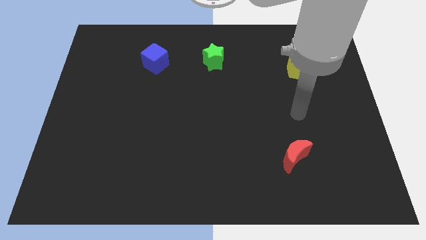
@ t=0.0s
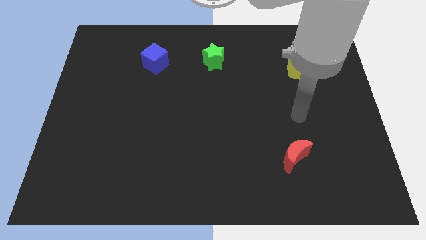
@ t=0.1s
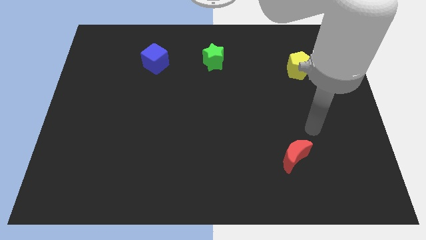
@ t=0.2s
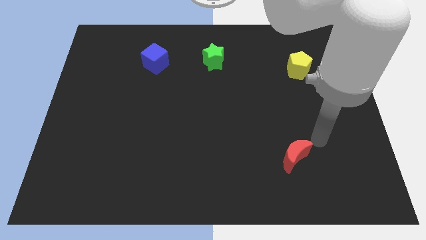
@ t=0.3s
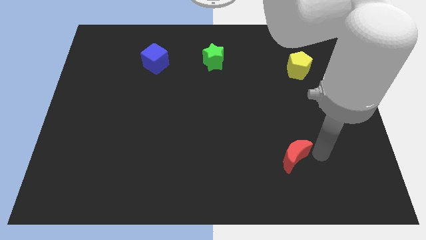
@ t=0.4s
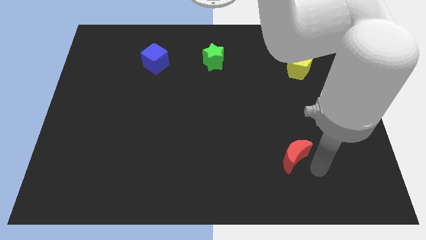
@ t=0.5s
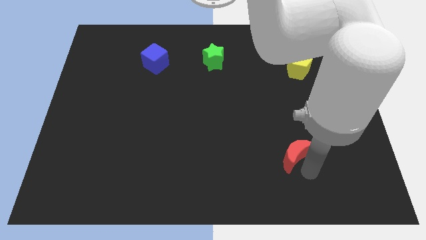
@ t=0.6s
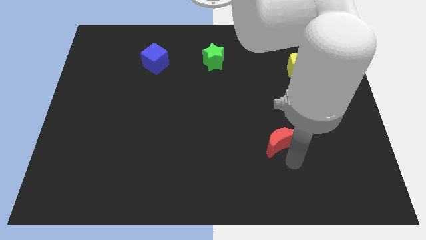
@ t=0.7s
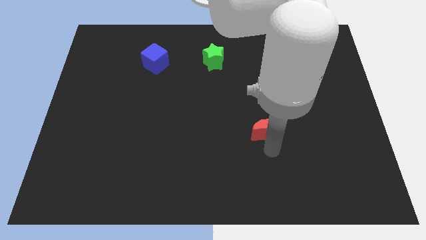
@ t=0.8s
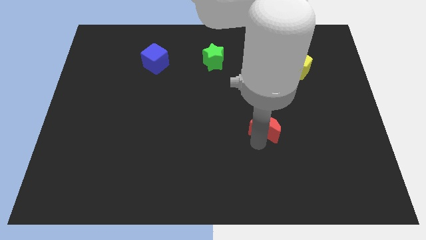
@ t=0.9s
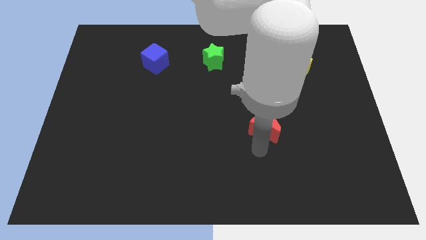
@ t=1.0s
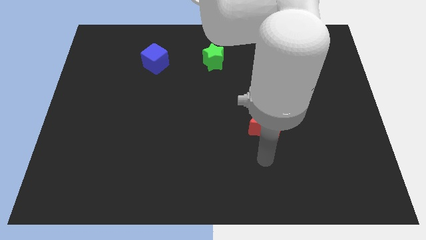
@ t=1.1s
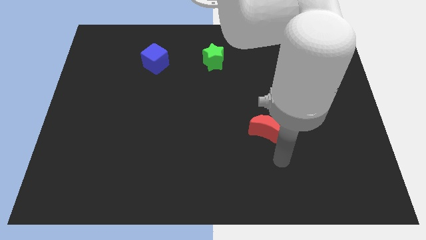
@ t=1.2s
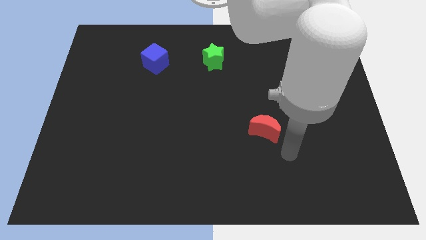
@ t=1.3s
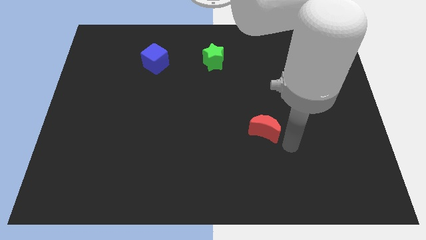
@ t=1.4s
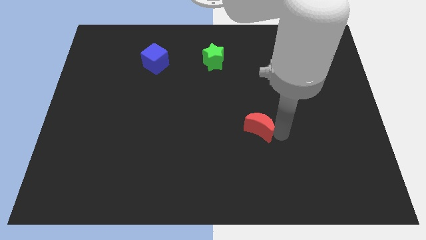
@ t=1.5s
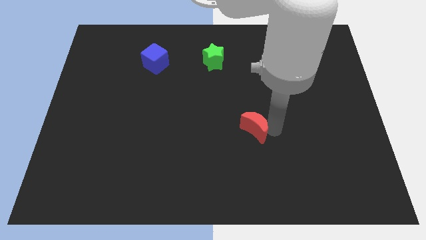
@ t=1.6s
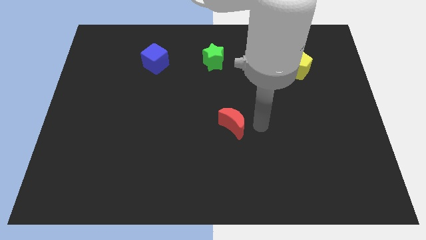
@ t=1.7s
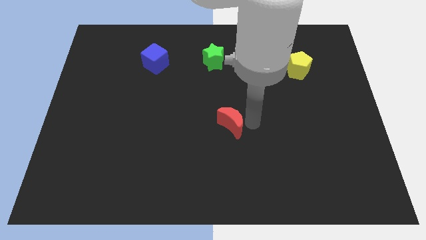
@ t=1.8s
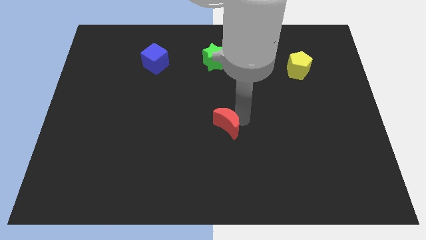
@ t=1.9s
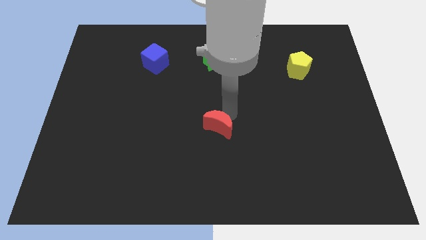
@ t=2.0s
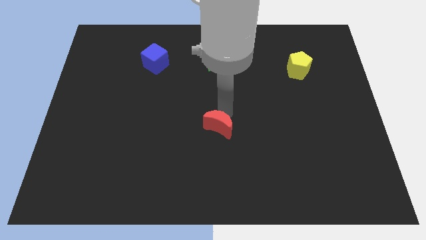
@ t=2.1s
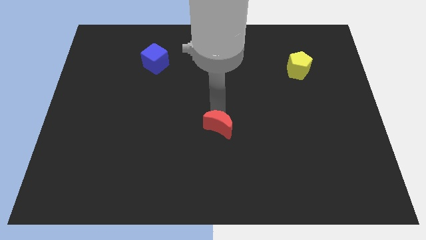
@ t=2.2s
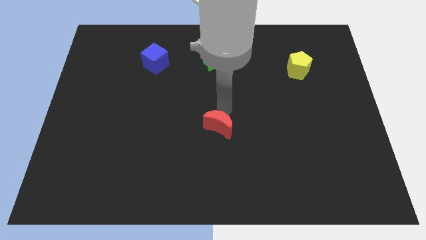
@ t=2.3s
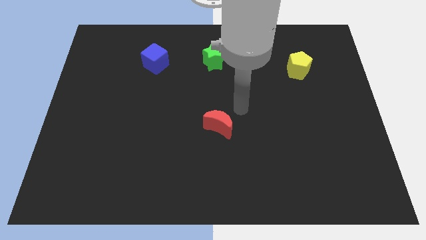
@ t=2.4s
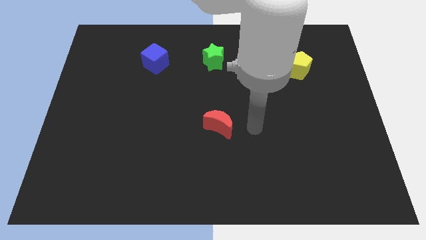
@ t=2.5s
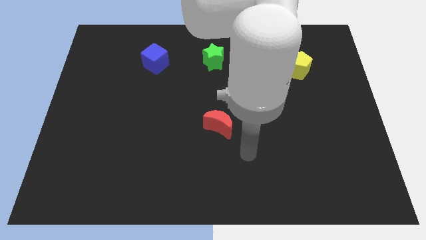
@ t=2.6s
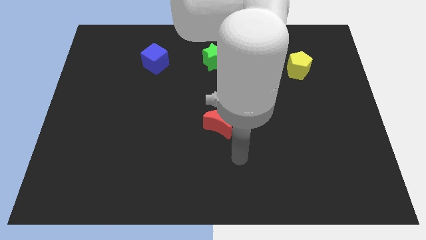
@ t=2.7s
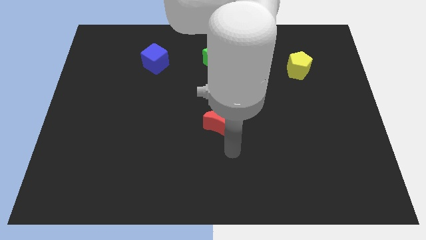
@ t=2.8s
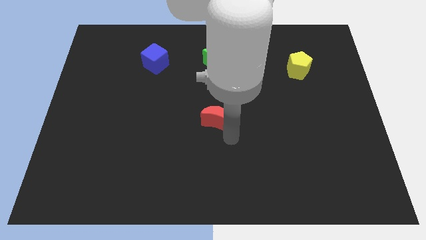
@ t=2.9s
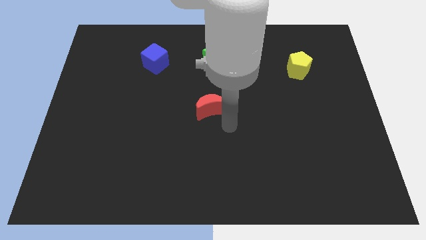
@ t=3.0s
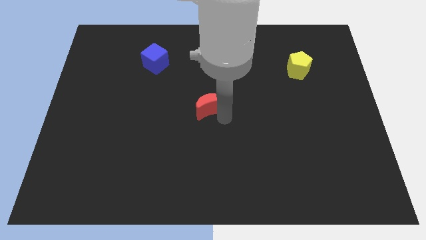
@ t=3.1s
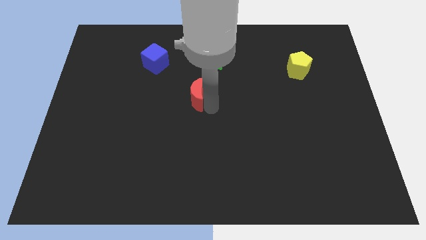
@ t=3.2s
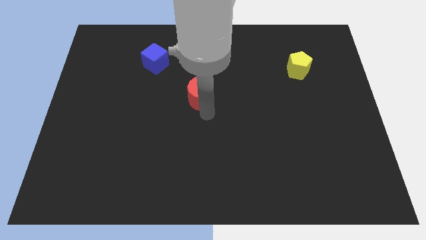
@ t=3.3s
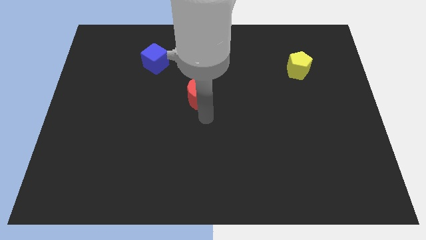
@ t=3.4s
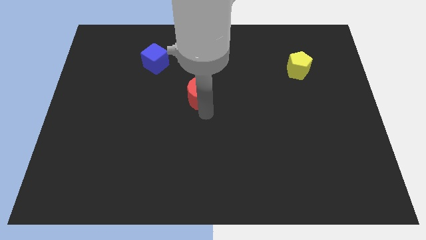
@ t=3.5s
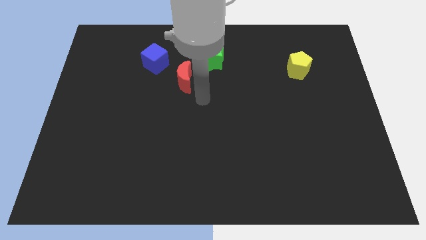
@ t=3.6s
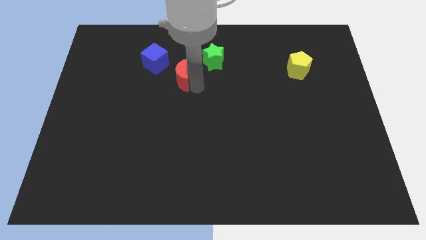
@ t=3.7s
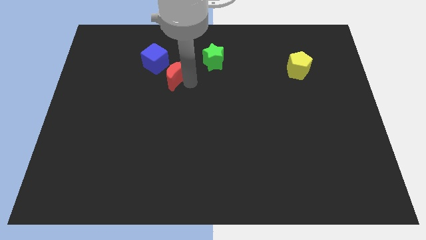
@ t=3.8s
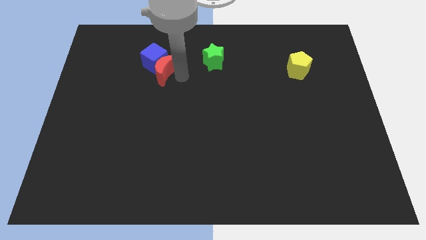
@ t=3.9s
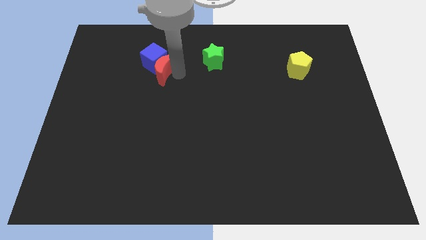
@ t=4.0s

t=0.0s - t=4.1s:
slide the red moon close to the blue block

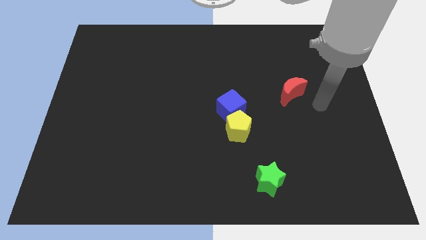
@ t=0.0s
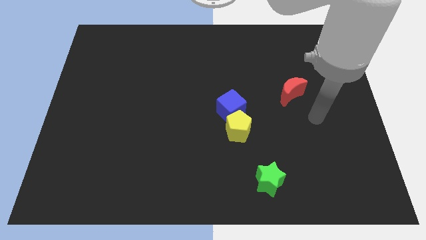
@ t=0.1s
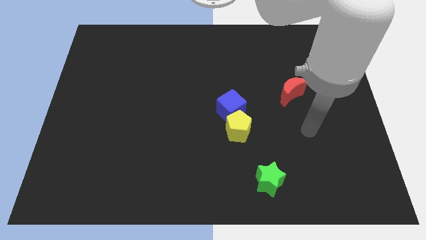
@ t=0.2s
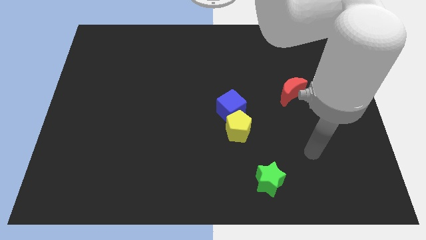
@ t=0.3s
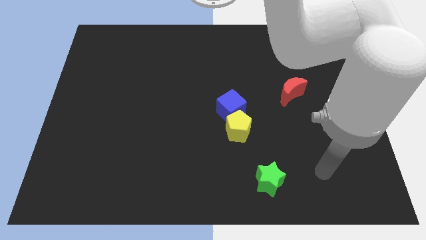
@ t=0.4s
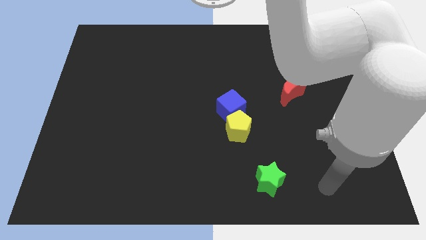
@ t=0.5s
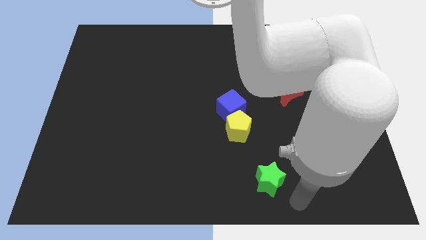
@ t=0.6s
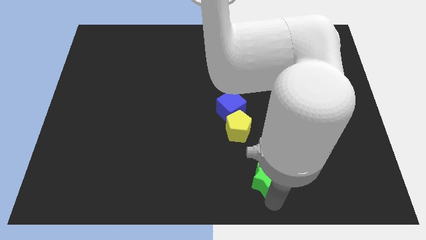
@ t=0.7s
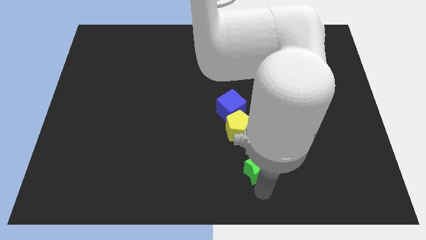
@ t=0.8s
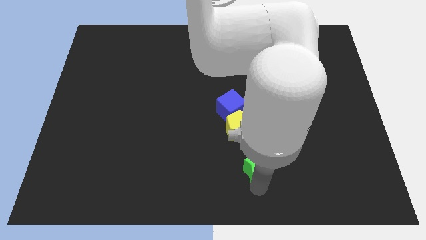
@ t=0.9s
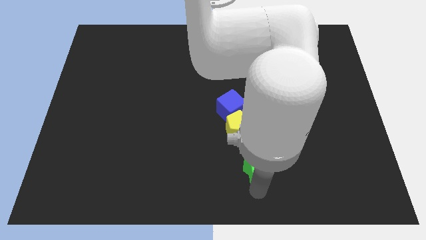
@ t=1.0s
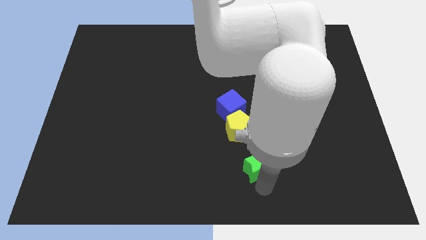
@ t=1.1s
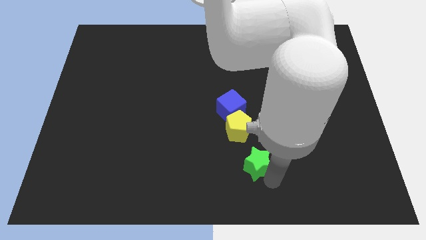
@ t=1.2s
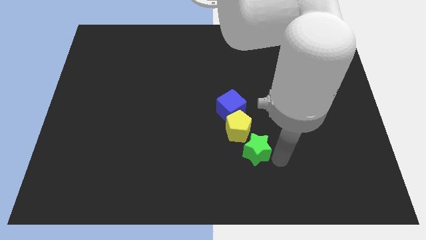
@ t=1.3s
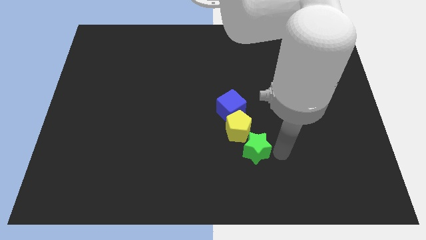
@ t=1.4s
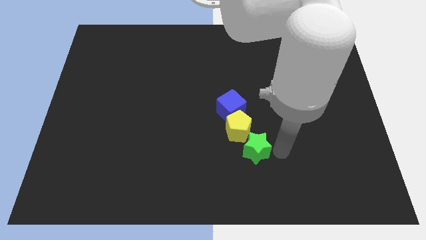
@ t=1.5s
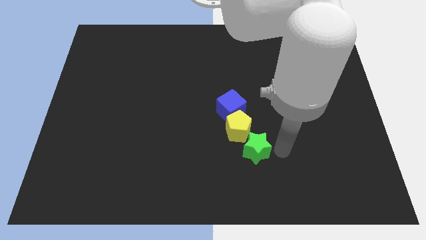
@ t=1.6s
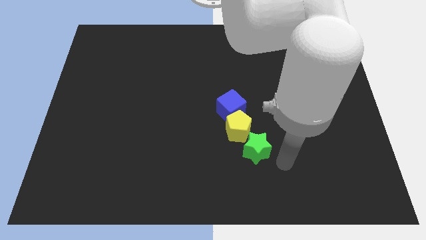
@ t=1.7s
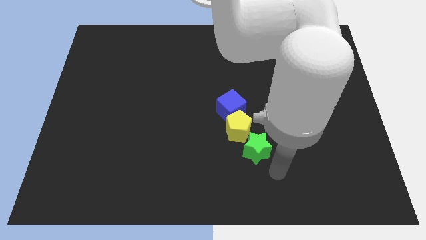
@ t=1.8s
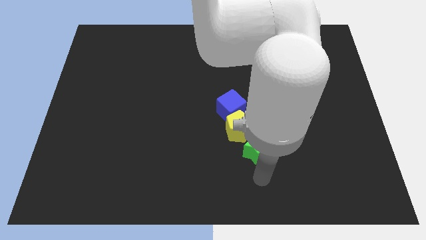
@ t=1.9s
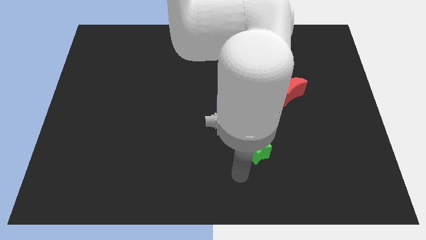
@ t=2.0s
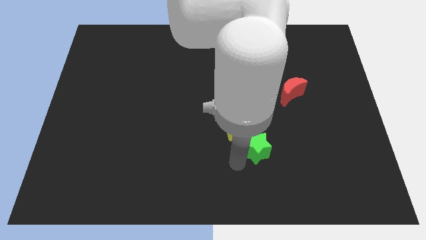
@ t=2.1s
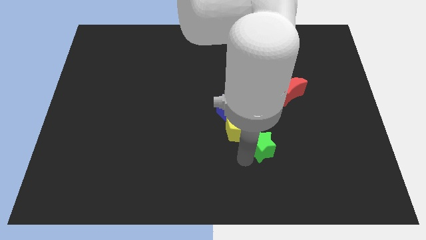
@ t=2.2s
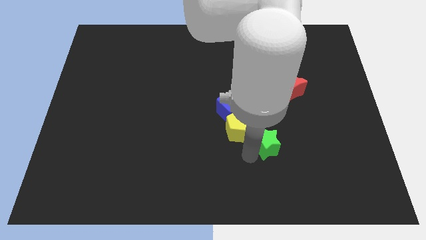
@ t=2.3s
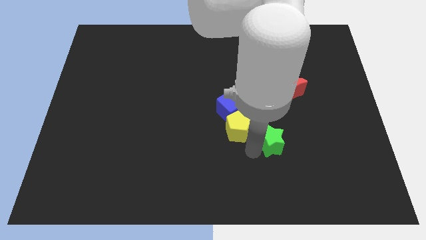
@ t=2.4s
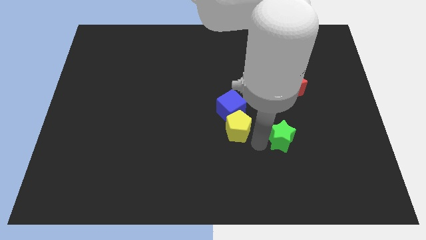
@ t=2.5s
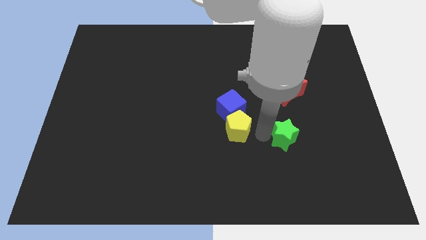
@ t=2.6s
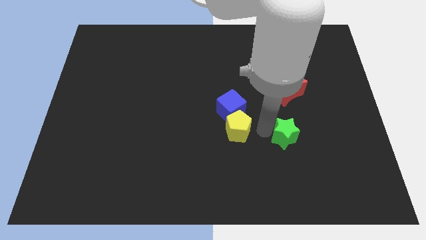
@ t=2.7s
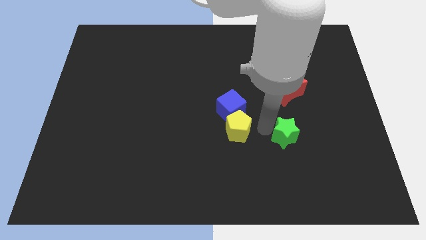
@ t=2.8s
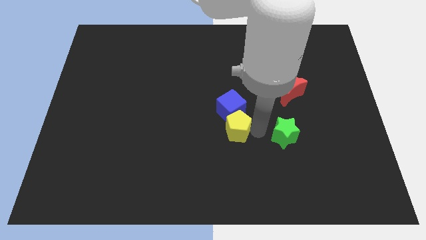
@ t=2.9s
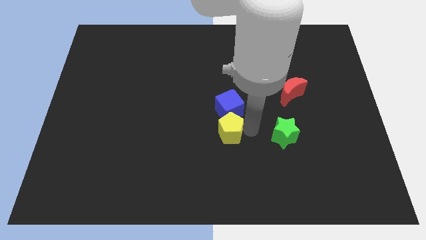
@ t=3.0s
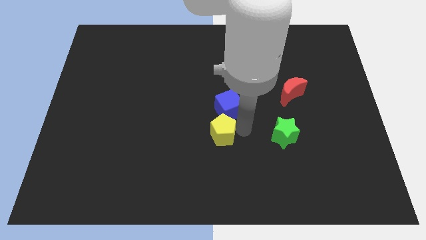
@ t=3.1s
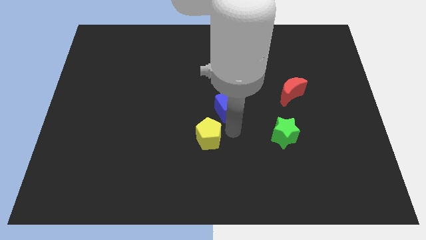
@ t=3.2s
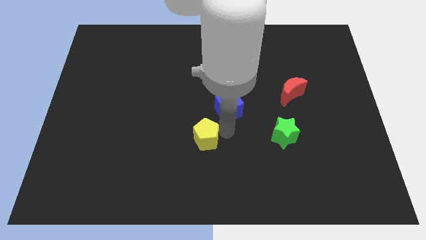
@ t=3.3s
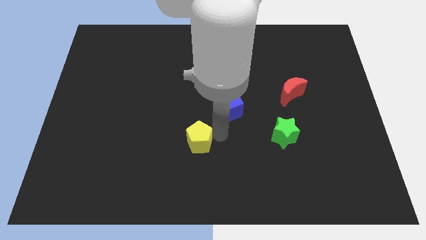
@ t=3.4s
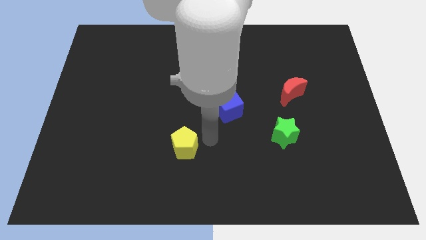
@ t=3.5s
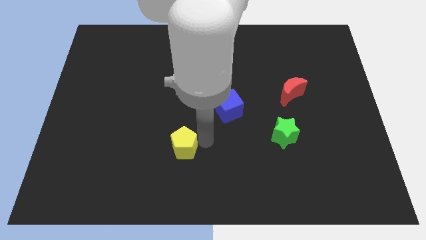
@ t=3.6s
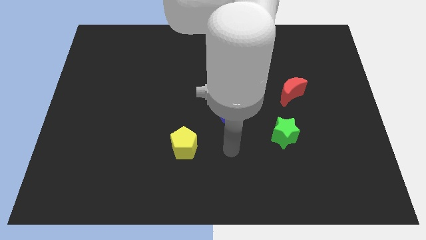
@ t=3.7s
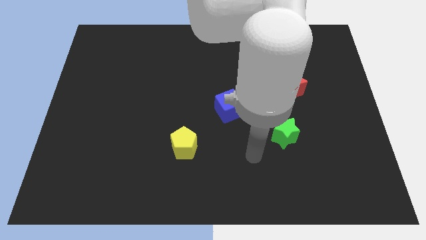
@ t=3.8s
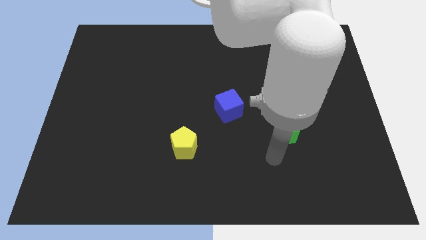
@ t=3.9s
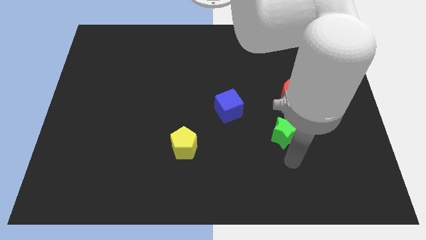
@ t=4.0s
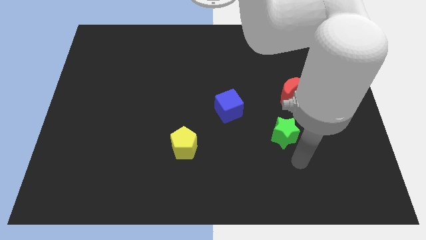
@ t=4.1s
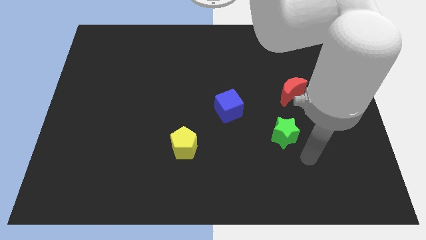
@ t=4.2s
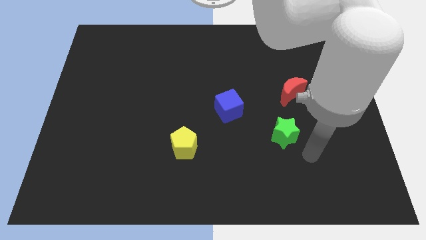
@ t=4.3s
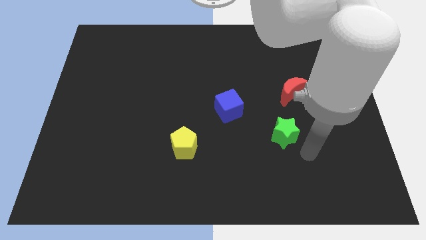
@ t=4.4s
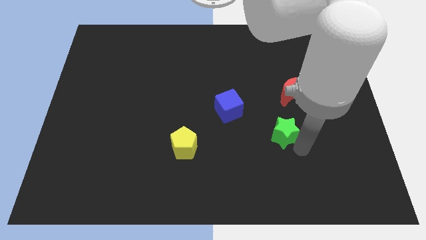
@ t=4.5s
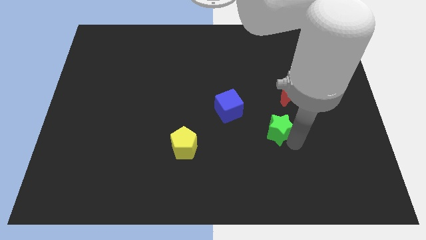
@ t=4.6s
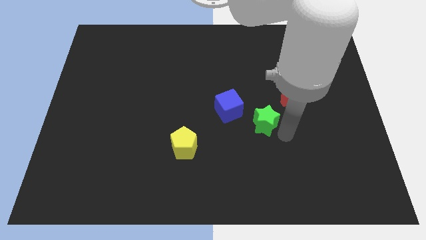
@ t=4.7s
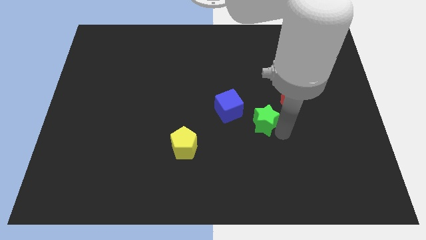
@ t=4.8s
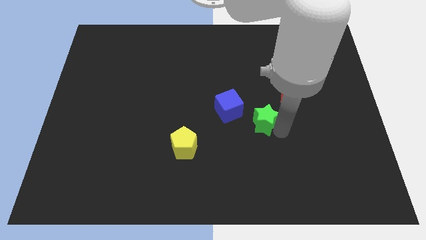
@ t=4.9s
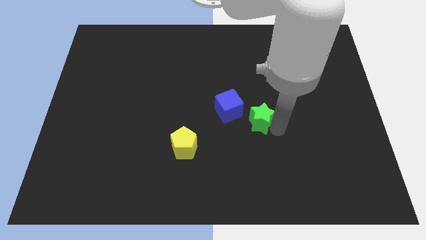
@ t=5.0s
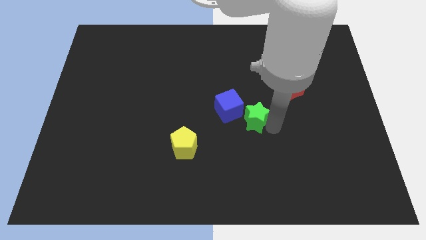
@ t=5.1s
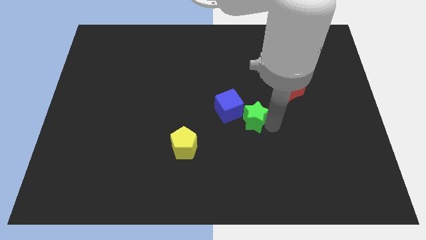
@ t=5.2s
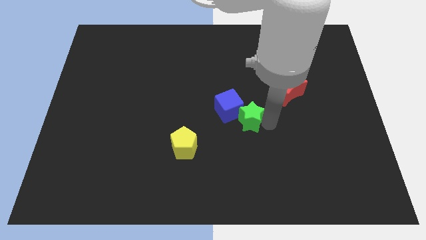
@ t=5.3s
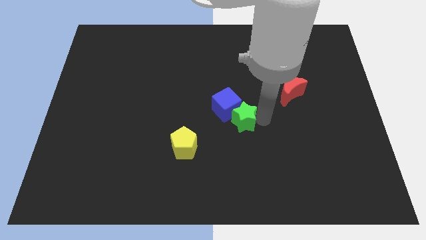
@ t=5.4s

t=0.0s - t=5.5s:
put the star towards the cube
